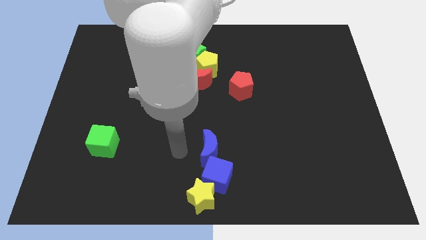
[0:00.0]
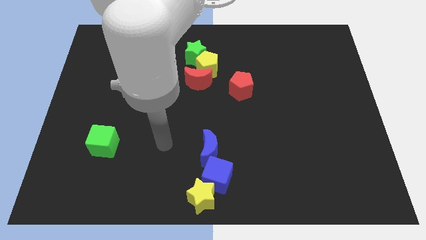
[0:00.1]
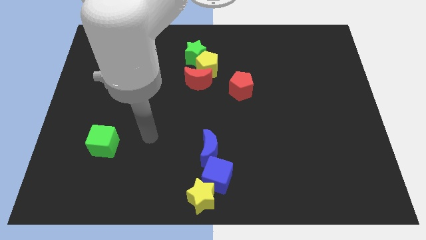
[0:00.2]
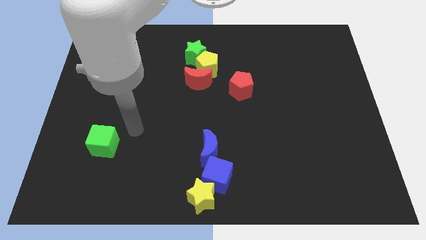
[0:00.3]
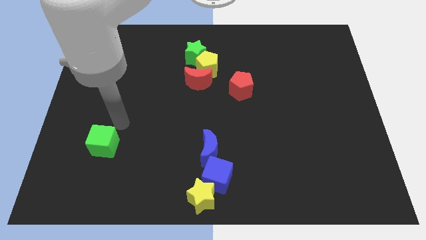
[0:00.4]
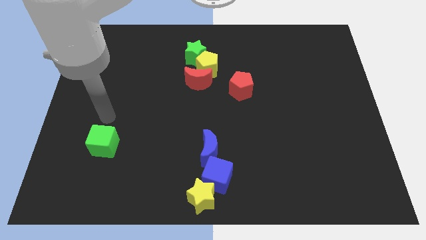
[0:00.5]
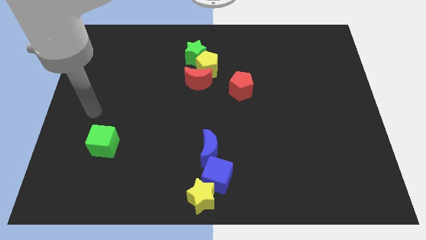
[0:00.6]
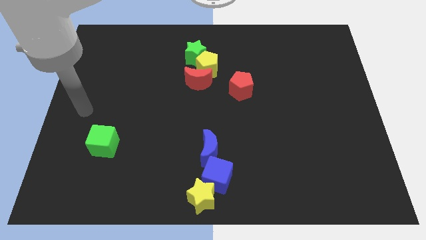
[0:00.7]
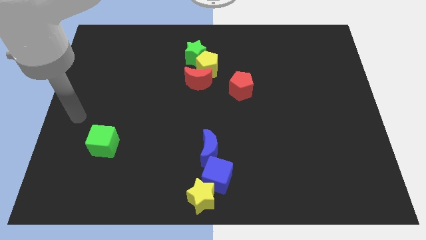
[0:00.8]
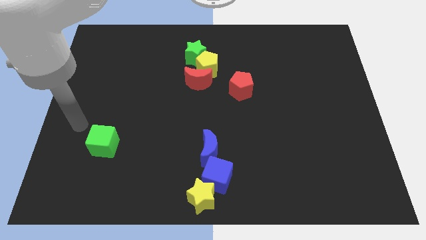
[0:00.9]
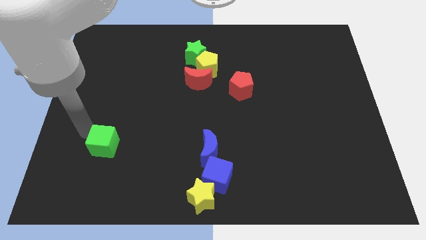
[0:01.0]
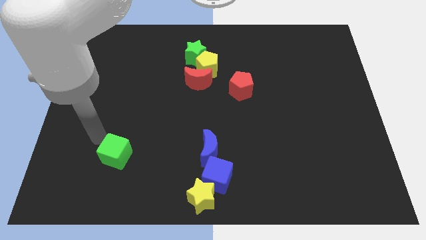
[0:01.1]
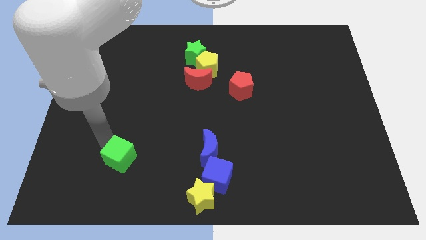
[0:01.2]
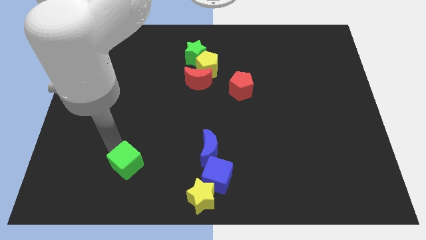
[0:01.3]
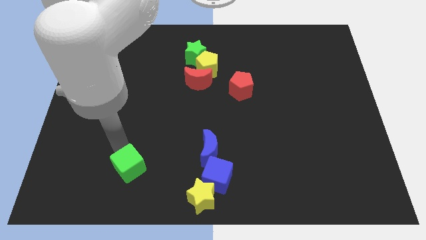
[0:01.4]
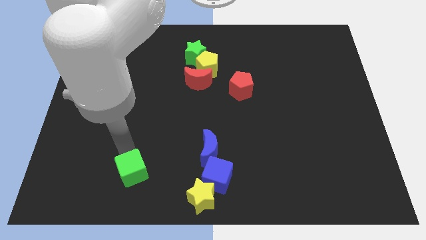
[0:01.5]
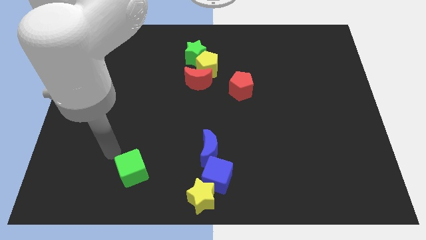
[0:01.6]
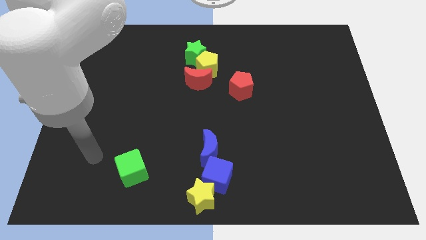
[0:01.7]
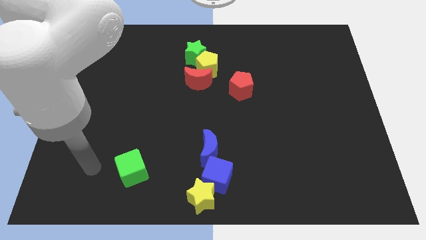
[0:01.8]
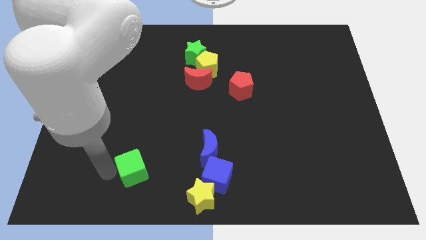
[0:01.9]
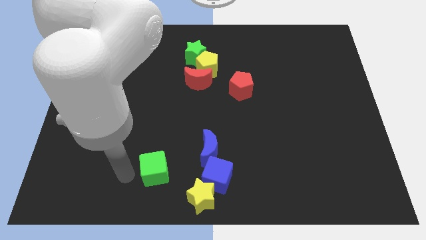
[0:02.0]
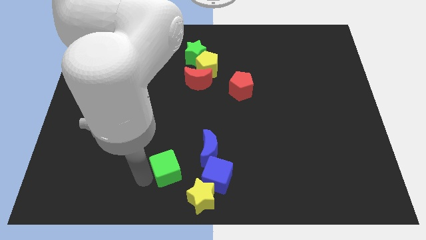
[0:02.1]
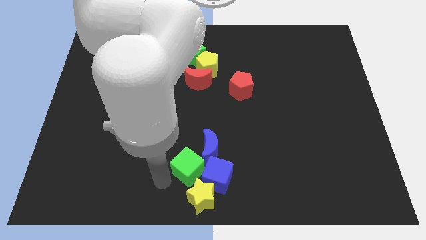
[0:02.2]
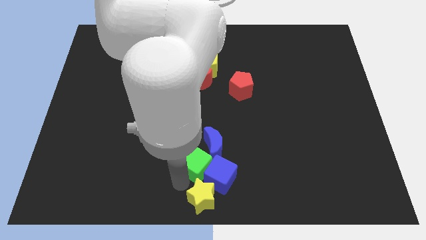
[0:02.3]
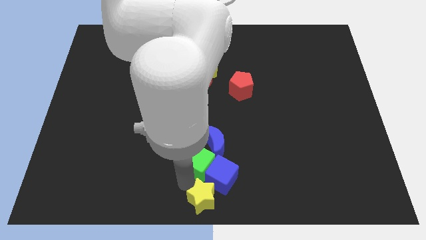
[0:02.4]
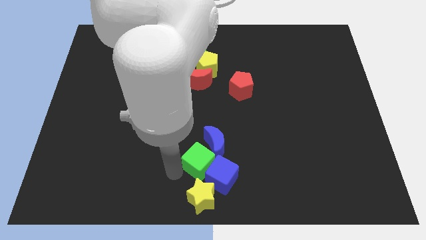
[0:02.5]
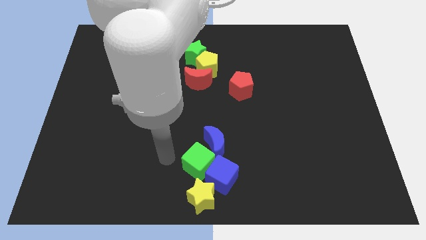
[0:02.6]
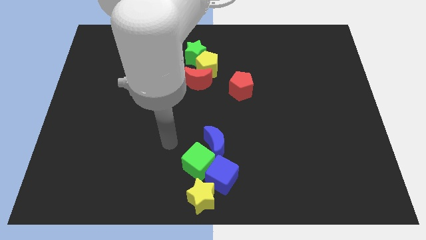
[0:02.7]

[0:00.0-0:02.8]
move the green cube to the top of the yellow star

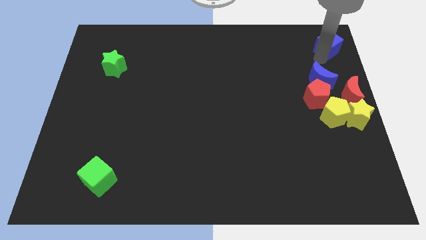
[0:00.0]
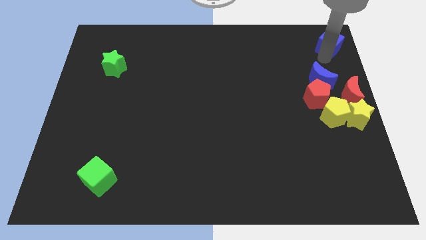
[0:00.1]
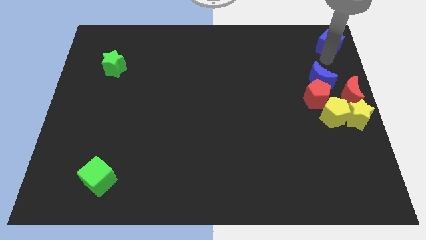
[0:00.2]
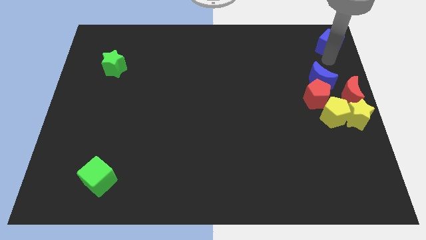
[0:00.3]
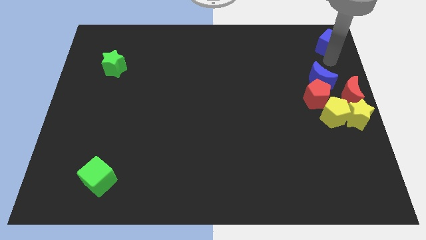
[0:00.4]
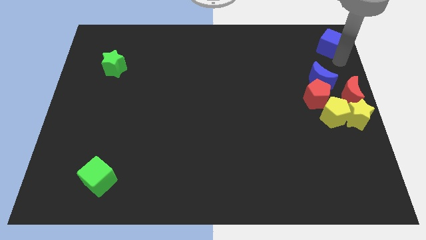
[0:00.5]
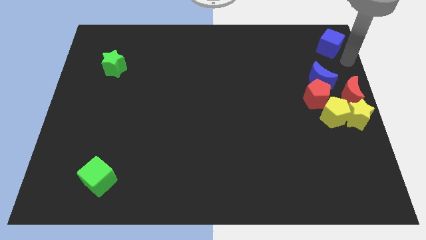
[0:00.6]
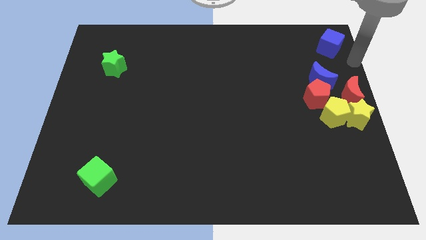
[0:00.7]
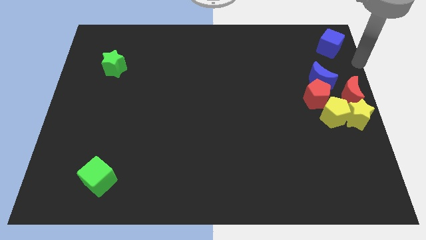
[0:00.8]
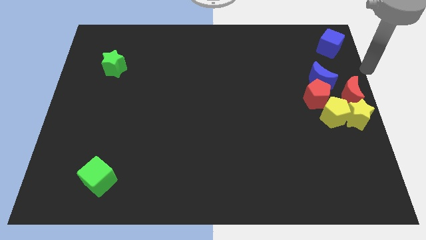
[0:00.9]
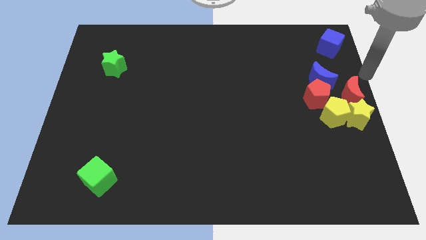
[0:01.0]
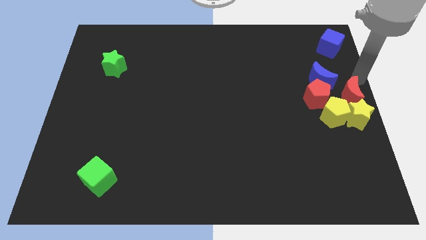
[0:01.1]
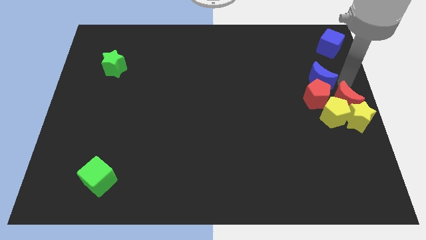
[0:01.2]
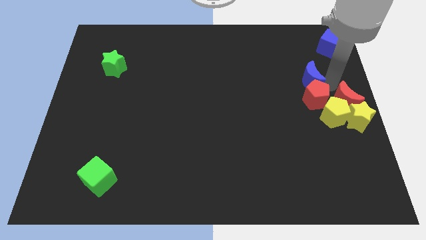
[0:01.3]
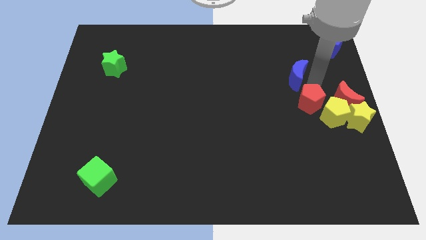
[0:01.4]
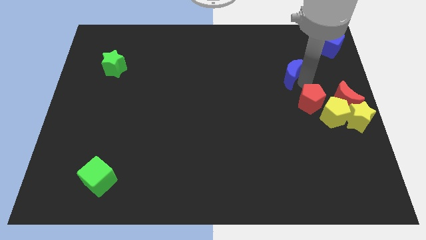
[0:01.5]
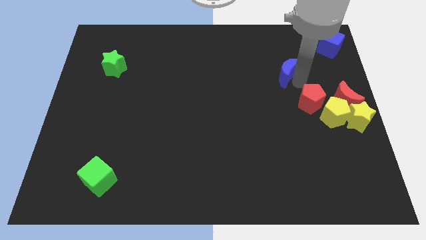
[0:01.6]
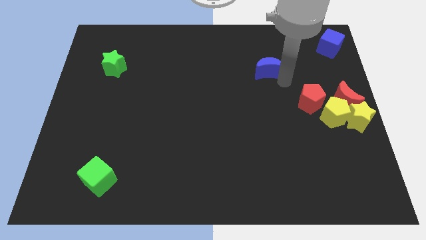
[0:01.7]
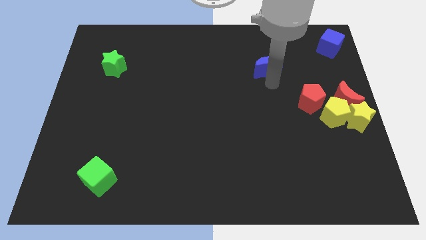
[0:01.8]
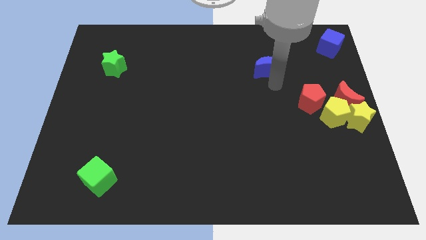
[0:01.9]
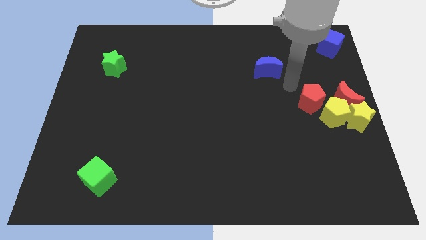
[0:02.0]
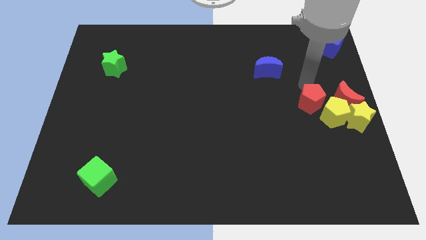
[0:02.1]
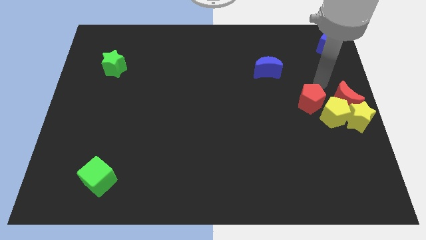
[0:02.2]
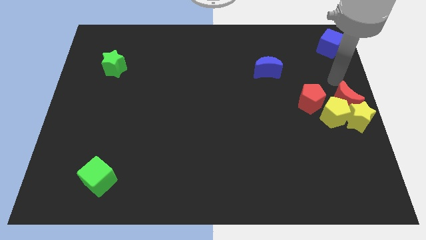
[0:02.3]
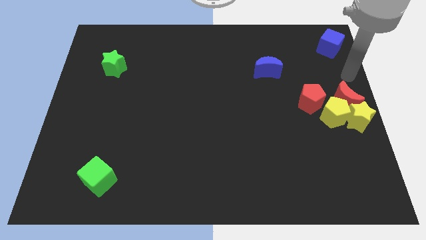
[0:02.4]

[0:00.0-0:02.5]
place the blue moon parallel to green star

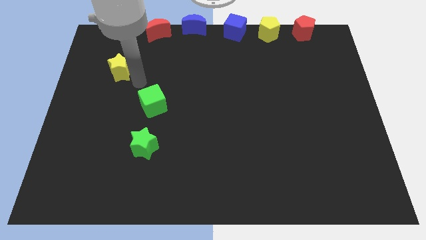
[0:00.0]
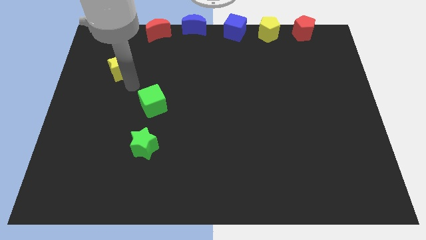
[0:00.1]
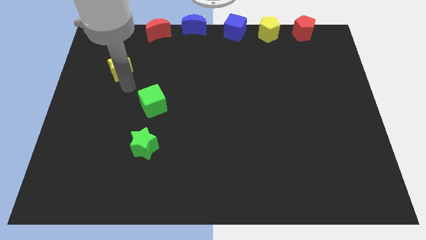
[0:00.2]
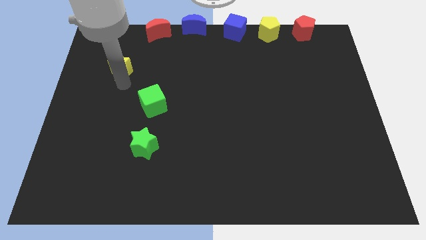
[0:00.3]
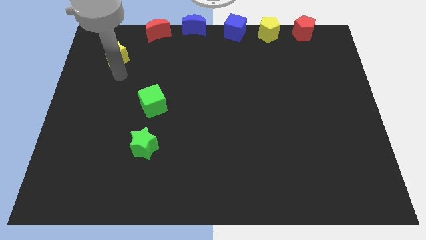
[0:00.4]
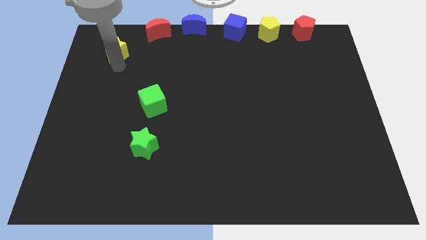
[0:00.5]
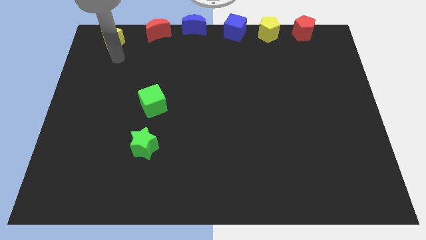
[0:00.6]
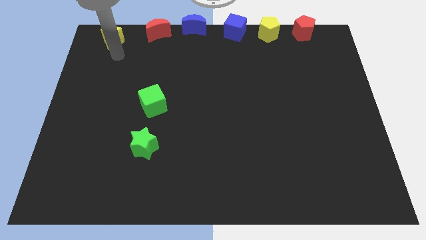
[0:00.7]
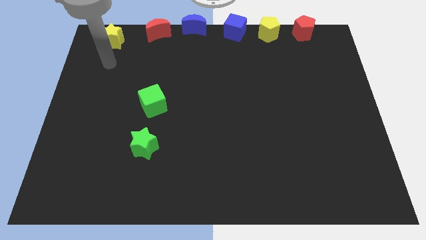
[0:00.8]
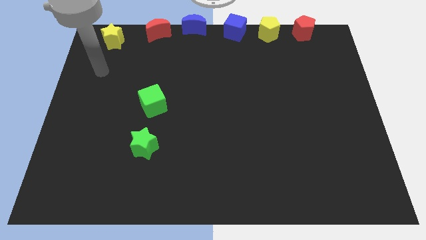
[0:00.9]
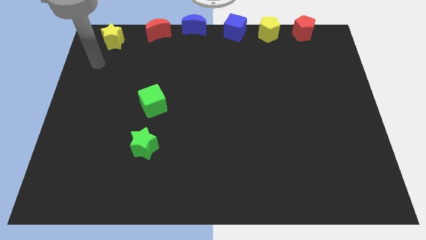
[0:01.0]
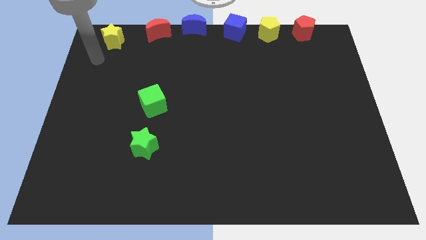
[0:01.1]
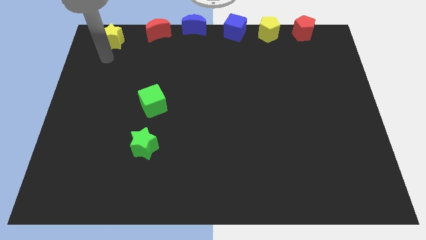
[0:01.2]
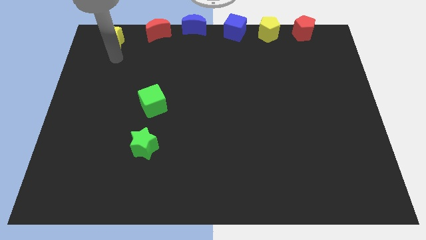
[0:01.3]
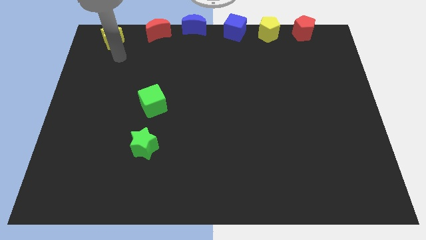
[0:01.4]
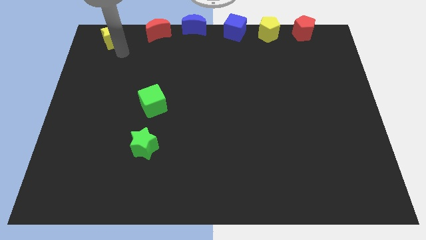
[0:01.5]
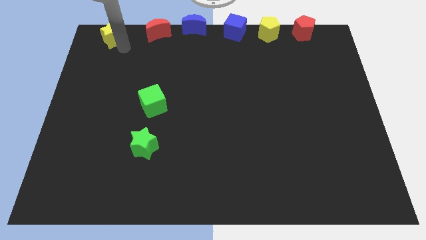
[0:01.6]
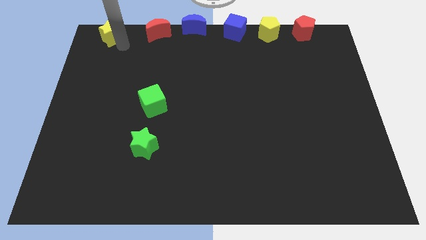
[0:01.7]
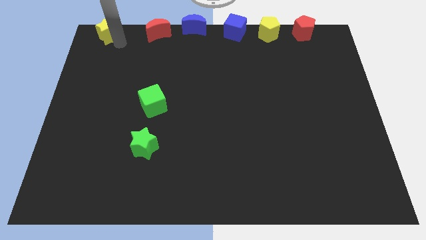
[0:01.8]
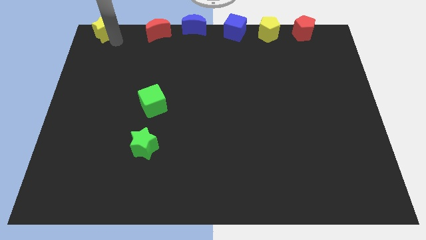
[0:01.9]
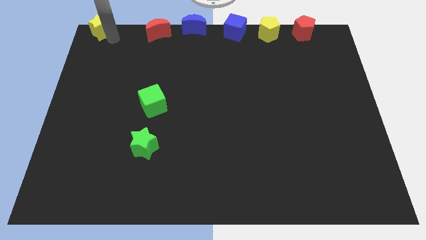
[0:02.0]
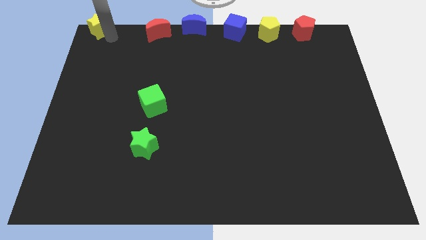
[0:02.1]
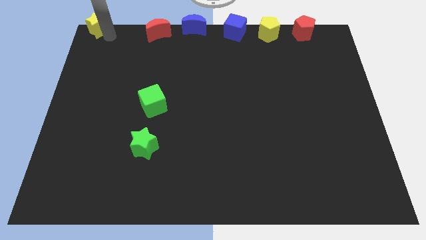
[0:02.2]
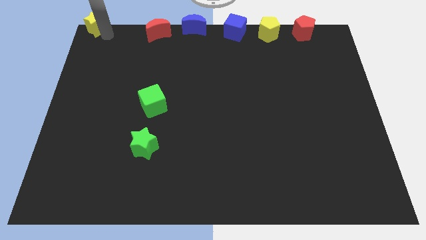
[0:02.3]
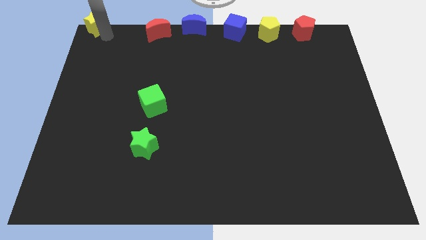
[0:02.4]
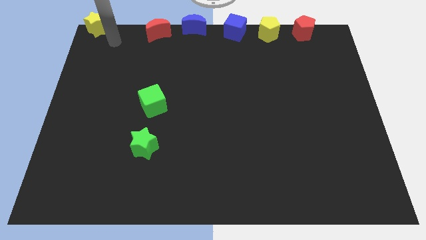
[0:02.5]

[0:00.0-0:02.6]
place a yellow star towards the top left corner of the board

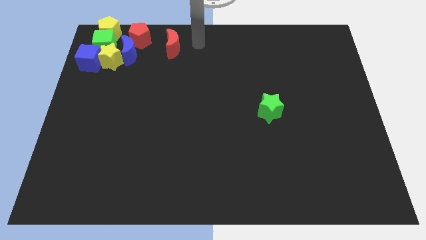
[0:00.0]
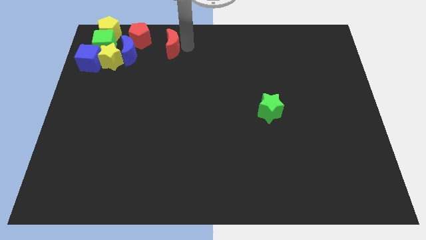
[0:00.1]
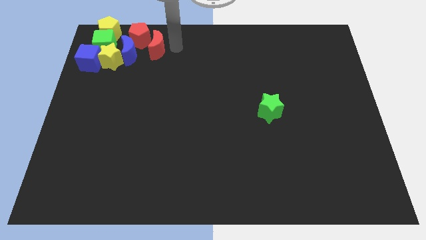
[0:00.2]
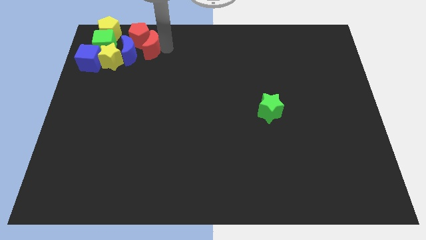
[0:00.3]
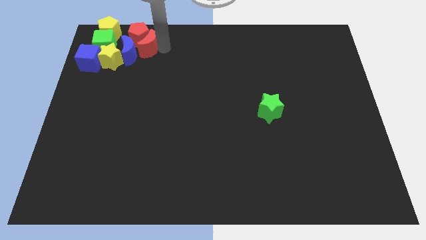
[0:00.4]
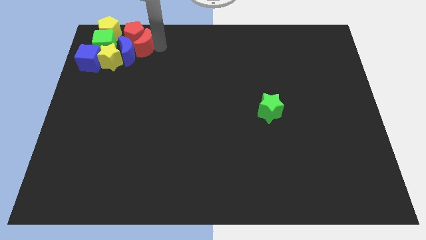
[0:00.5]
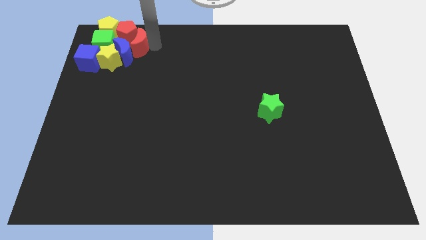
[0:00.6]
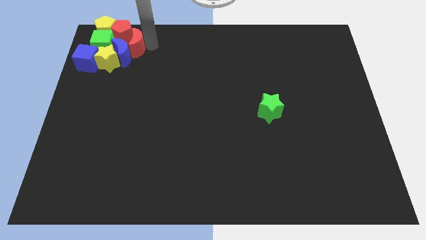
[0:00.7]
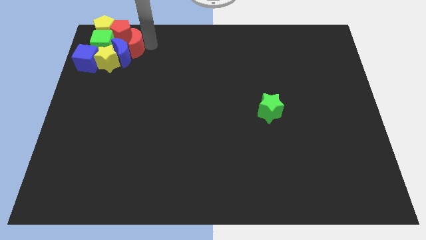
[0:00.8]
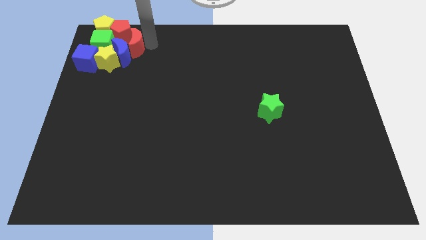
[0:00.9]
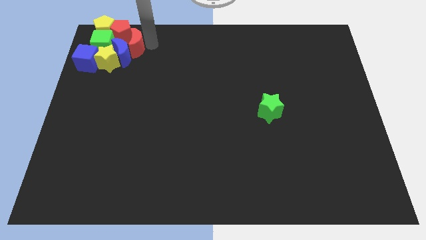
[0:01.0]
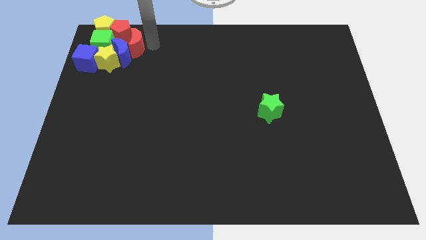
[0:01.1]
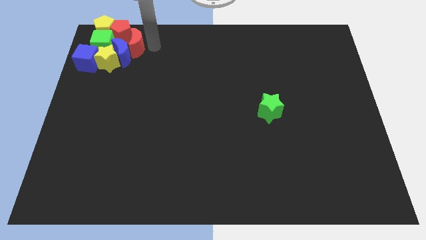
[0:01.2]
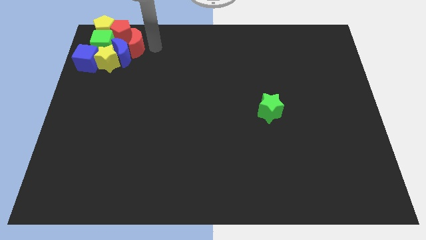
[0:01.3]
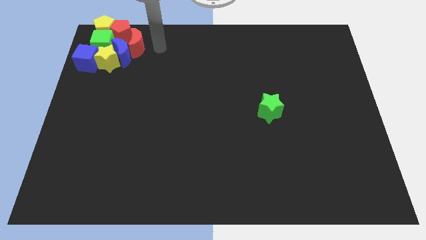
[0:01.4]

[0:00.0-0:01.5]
push the red crescent into the red pentagon
